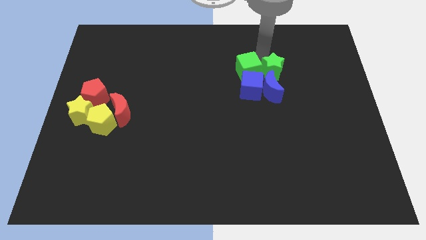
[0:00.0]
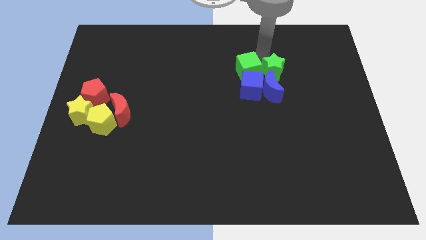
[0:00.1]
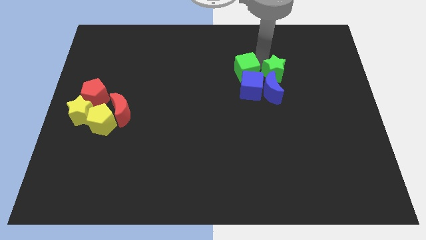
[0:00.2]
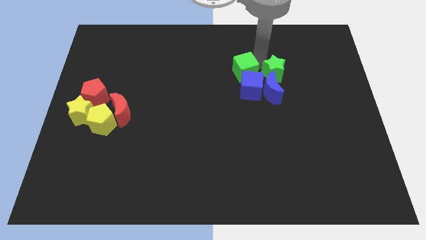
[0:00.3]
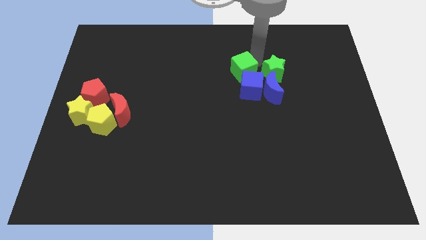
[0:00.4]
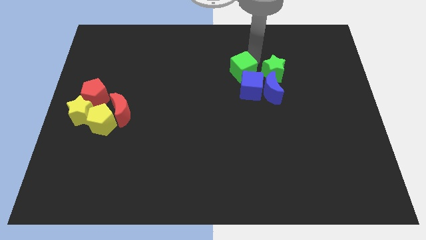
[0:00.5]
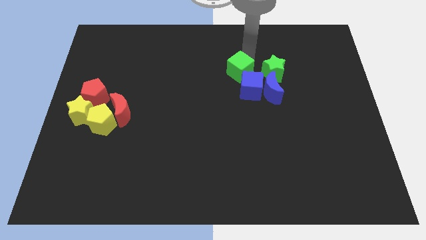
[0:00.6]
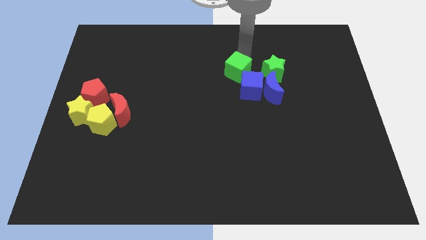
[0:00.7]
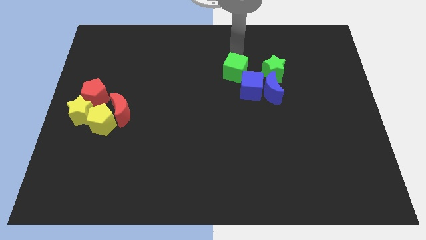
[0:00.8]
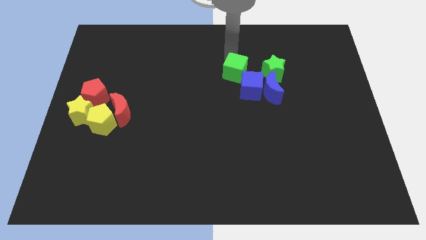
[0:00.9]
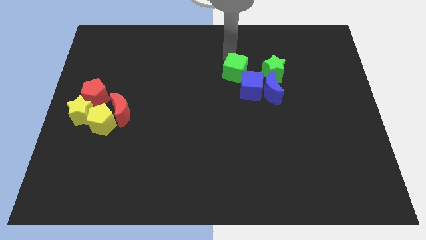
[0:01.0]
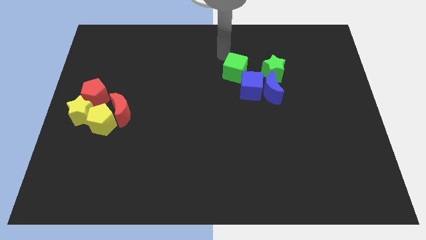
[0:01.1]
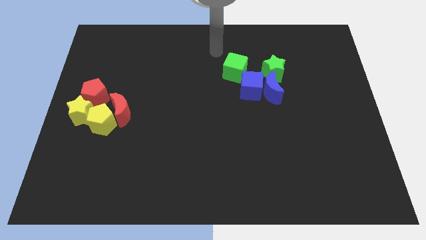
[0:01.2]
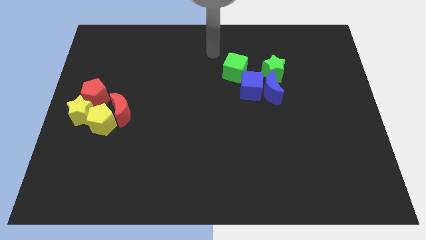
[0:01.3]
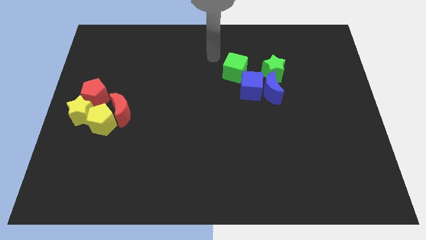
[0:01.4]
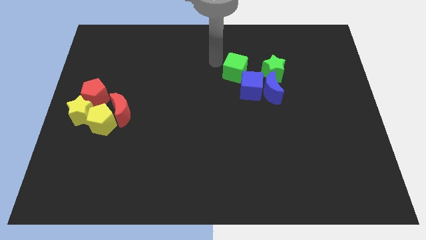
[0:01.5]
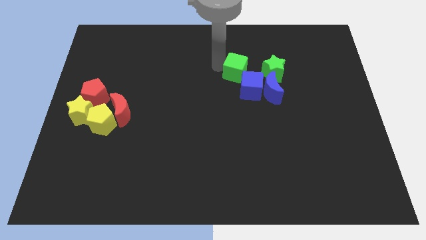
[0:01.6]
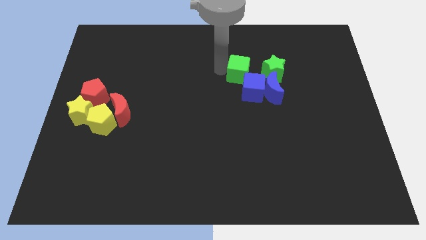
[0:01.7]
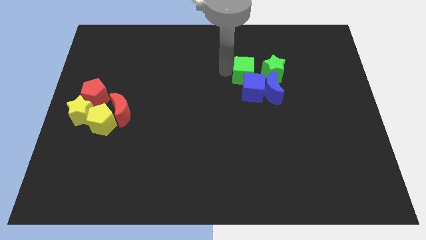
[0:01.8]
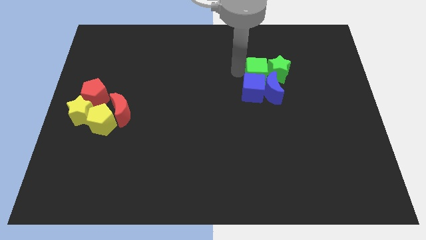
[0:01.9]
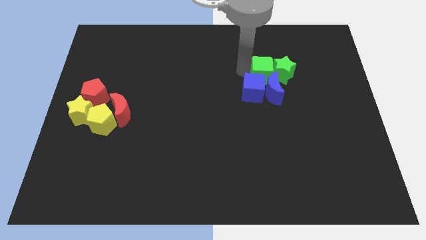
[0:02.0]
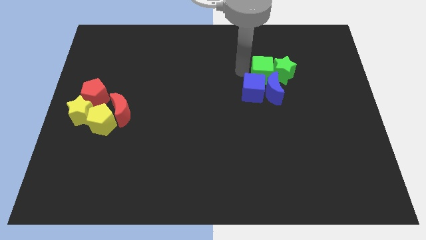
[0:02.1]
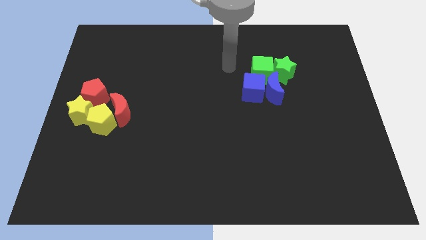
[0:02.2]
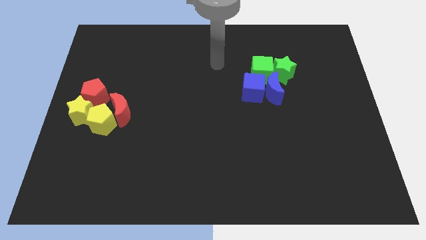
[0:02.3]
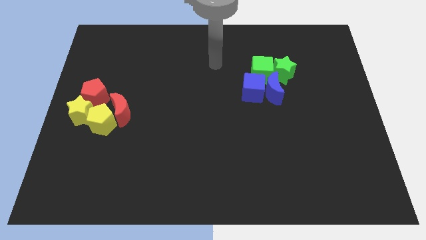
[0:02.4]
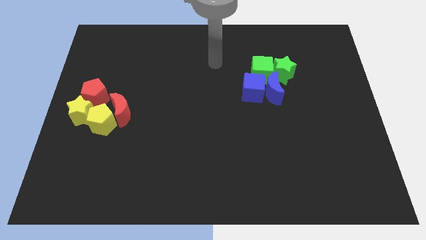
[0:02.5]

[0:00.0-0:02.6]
slightly push the green and blue blocks

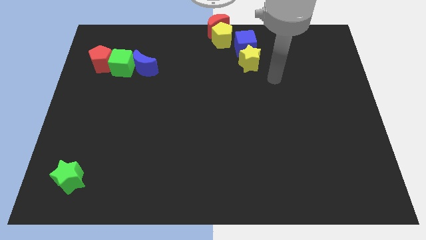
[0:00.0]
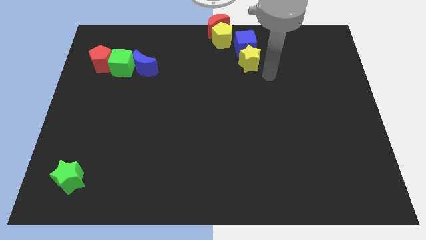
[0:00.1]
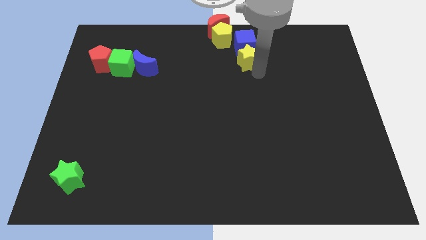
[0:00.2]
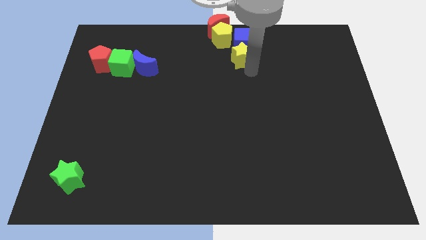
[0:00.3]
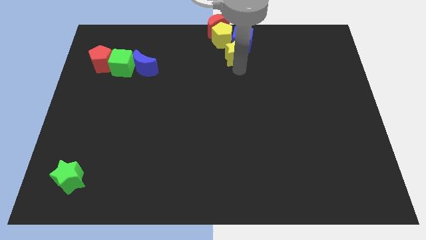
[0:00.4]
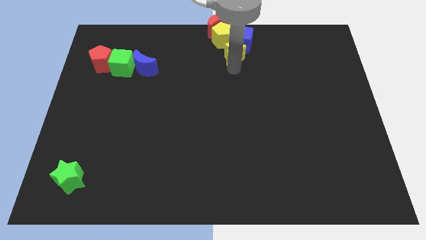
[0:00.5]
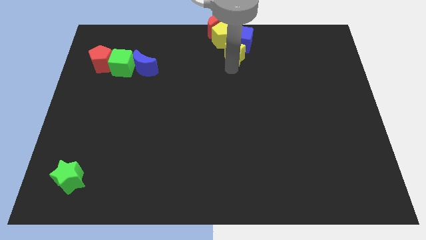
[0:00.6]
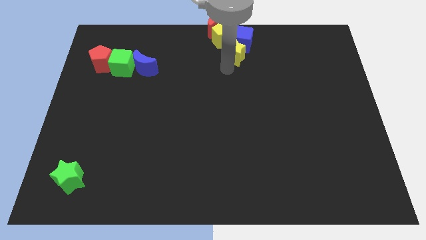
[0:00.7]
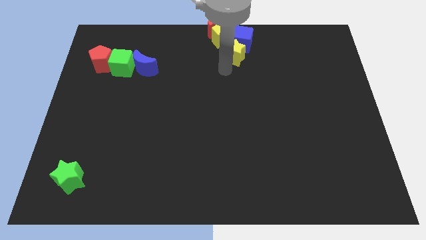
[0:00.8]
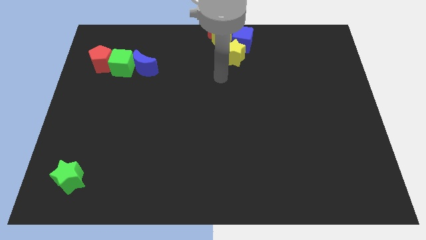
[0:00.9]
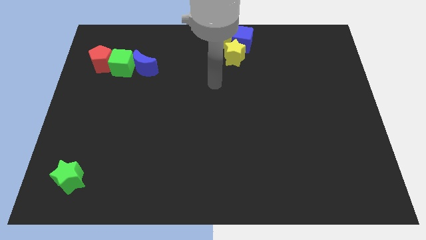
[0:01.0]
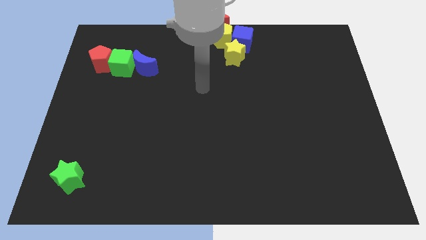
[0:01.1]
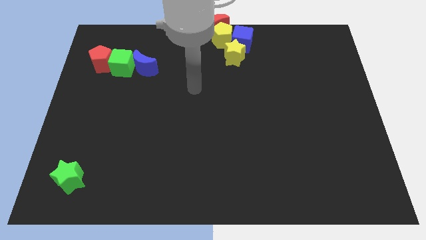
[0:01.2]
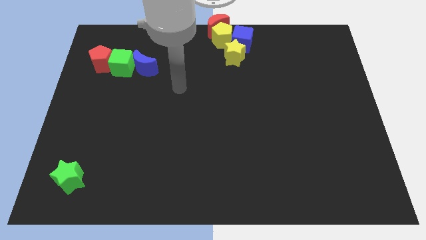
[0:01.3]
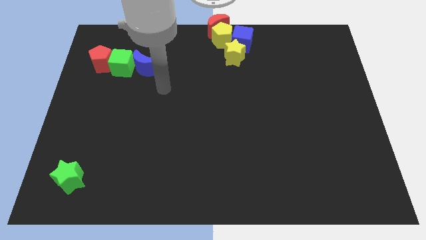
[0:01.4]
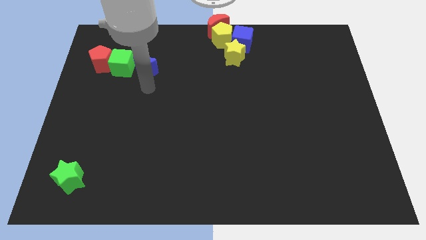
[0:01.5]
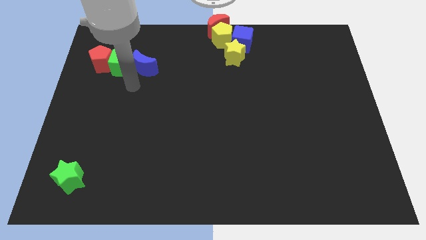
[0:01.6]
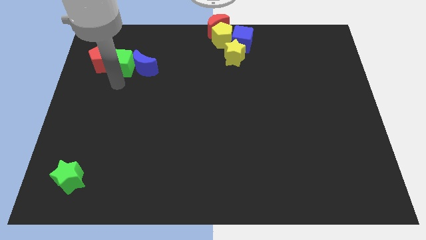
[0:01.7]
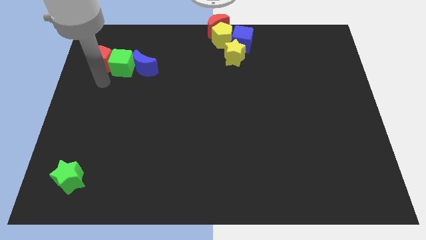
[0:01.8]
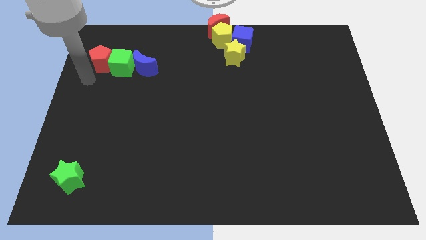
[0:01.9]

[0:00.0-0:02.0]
move yellow star slightly left

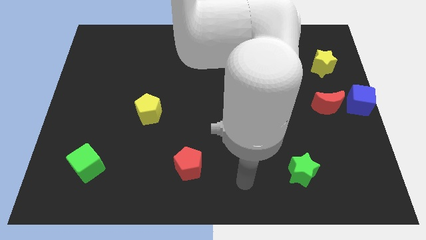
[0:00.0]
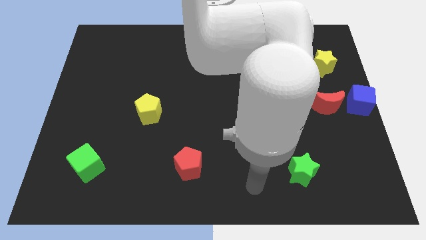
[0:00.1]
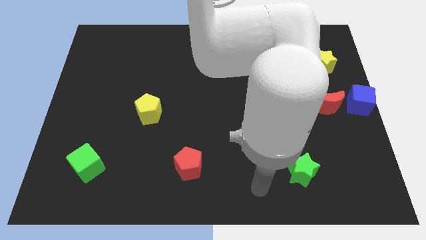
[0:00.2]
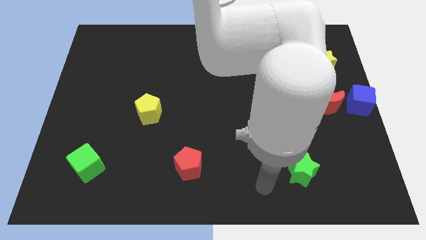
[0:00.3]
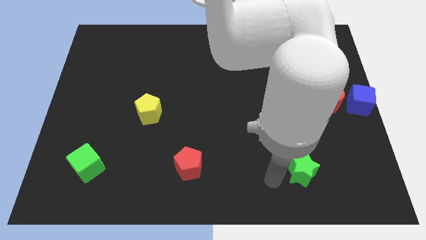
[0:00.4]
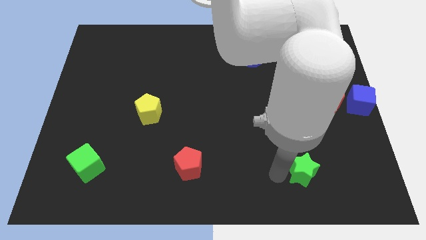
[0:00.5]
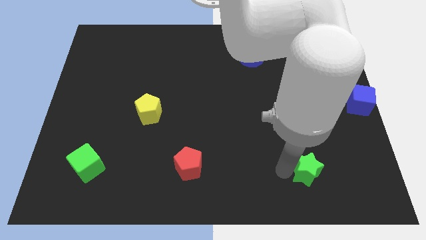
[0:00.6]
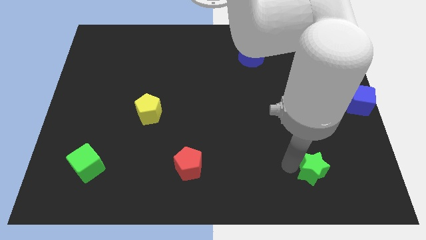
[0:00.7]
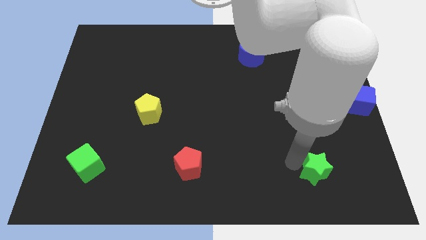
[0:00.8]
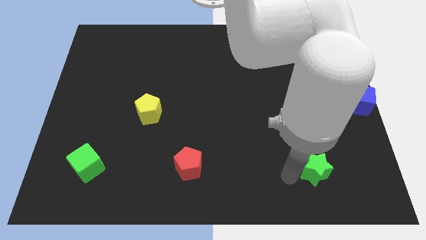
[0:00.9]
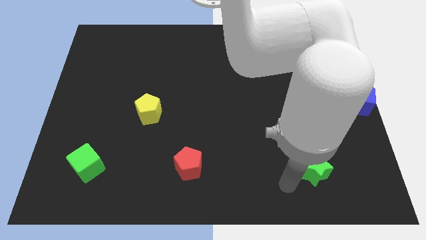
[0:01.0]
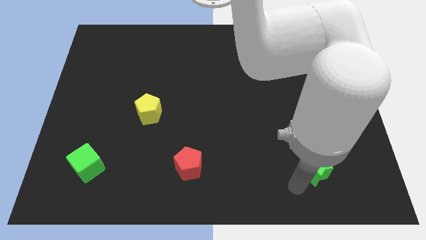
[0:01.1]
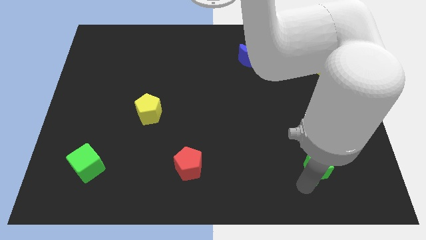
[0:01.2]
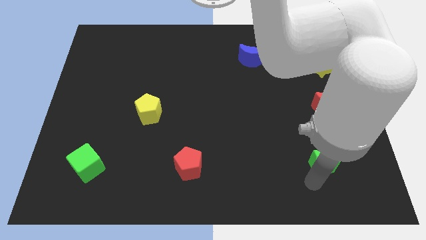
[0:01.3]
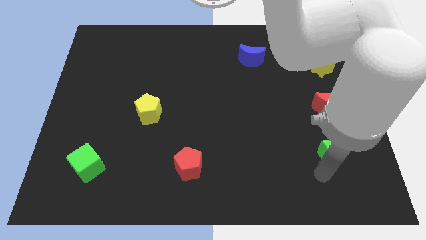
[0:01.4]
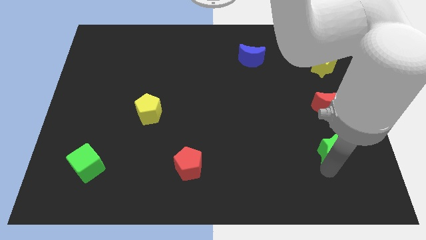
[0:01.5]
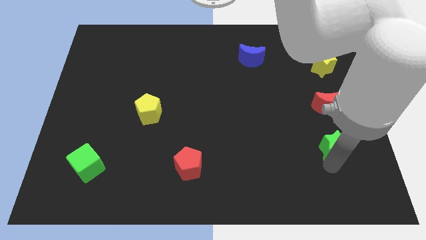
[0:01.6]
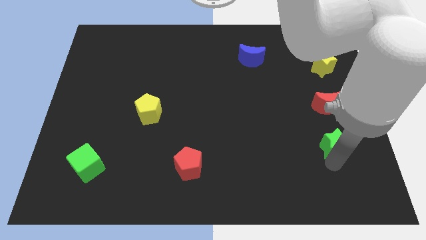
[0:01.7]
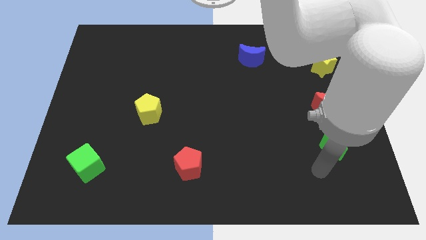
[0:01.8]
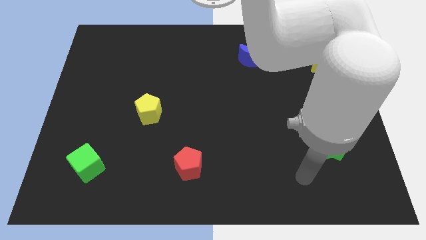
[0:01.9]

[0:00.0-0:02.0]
move the green star below red moon

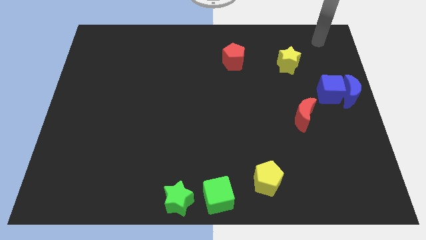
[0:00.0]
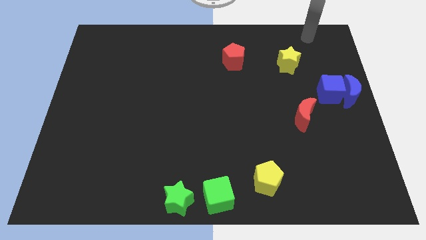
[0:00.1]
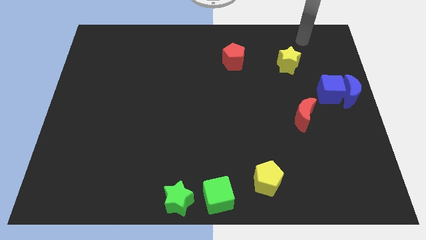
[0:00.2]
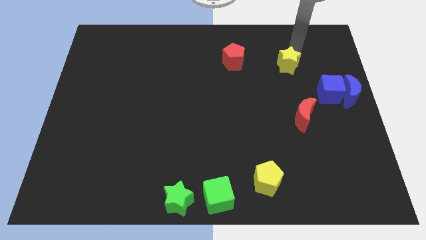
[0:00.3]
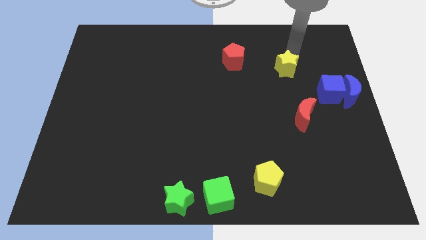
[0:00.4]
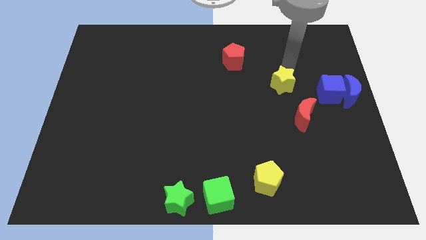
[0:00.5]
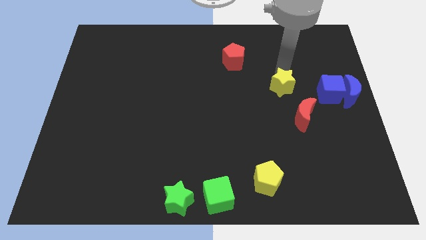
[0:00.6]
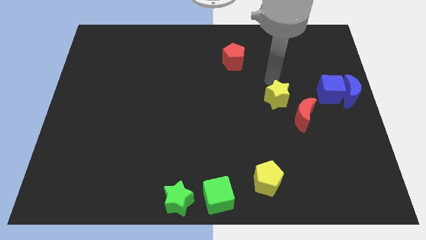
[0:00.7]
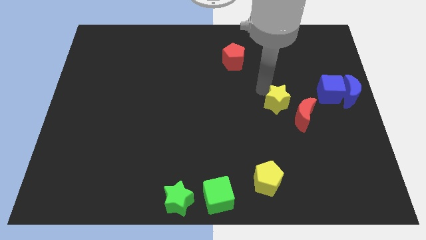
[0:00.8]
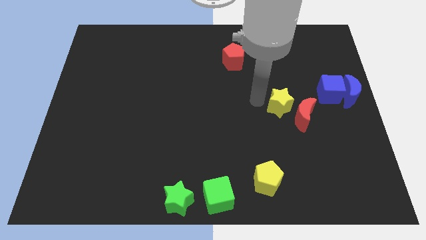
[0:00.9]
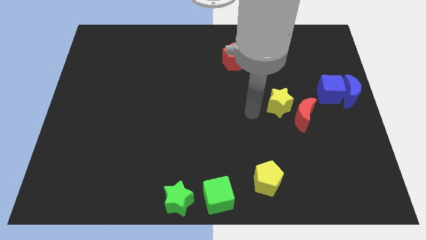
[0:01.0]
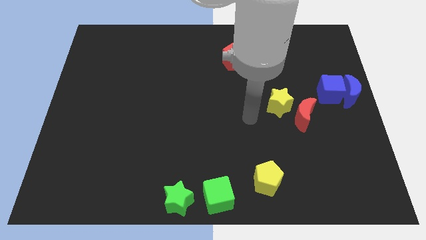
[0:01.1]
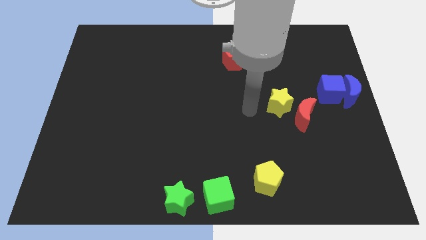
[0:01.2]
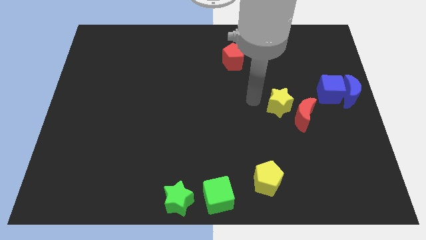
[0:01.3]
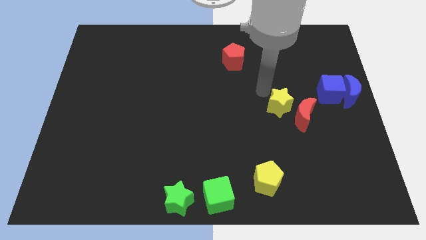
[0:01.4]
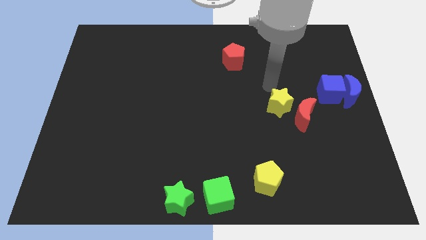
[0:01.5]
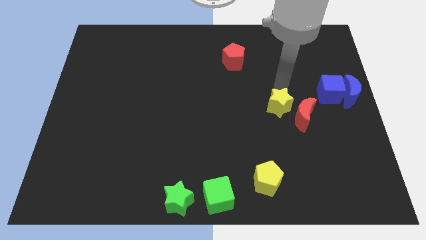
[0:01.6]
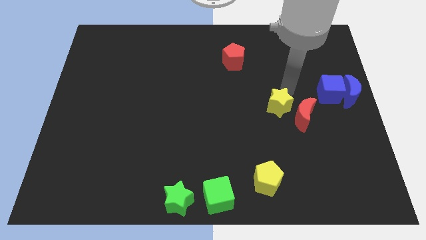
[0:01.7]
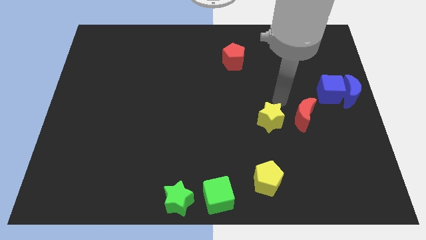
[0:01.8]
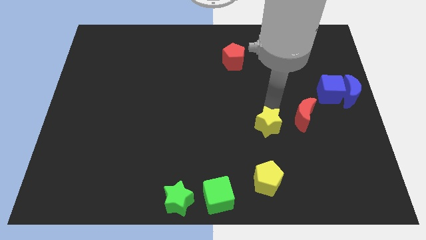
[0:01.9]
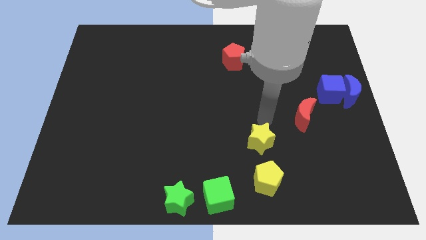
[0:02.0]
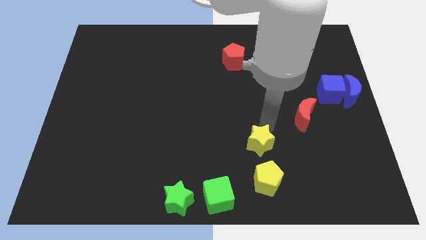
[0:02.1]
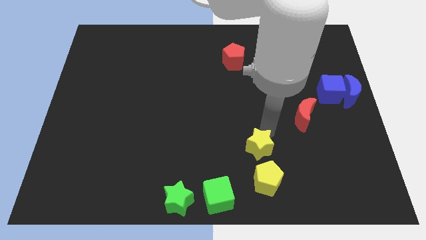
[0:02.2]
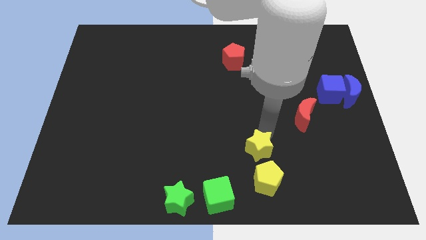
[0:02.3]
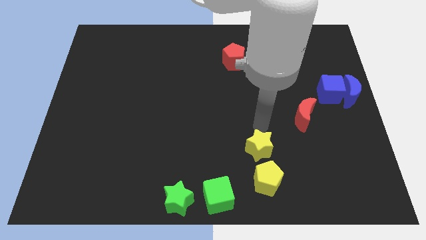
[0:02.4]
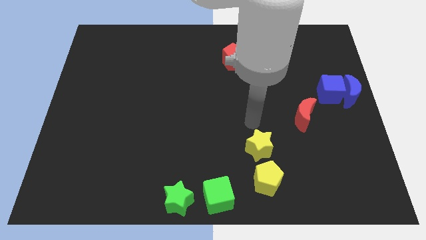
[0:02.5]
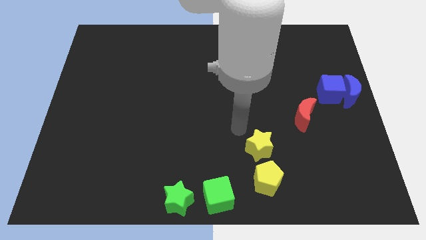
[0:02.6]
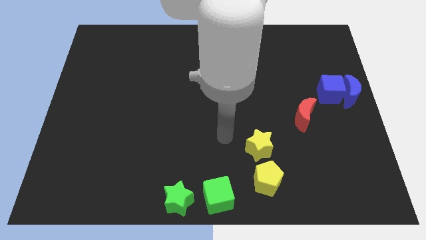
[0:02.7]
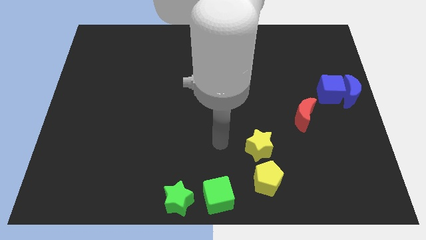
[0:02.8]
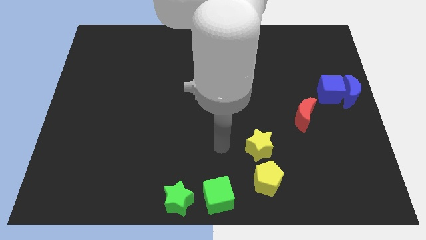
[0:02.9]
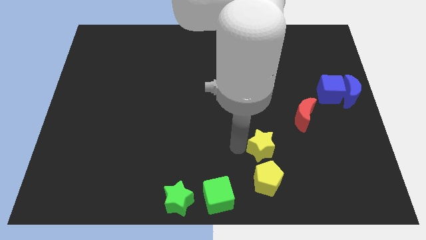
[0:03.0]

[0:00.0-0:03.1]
move yellow star towards top of the yellow pentagon
